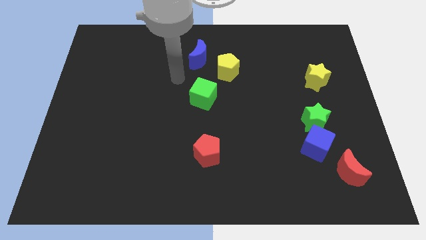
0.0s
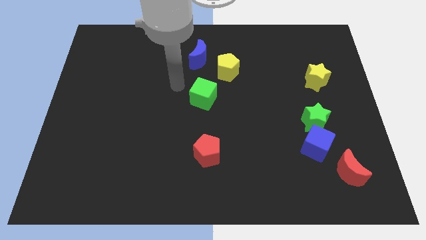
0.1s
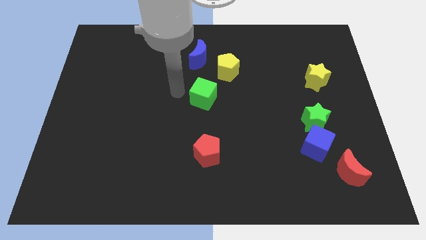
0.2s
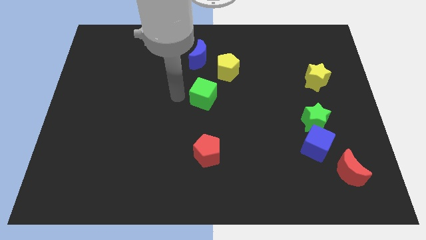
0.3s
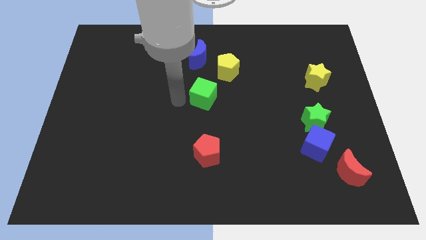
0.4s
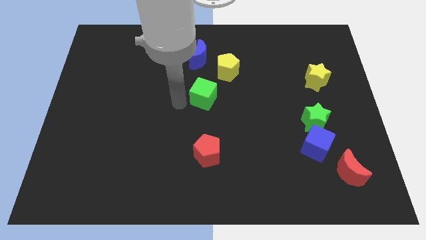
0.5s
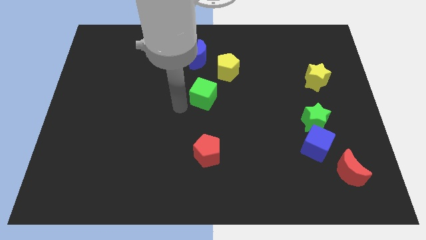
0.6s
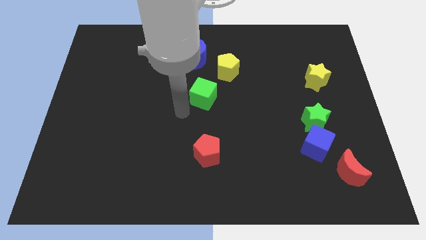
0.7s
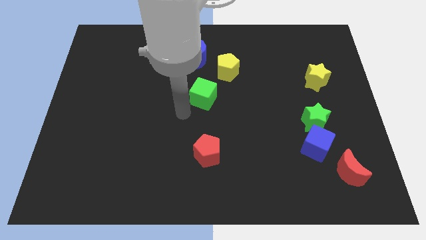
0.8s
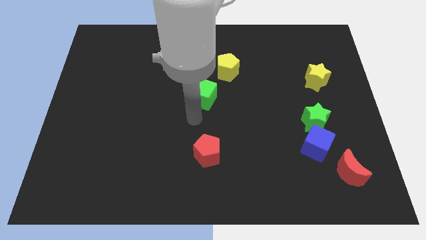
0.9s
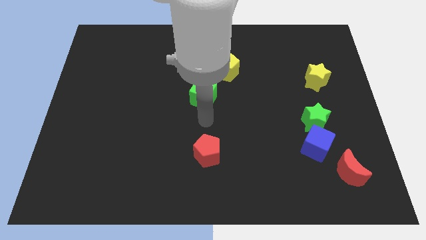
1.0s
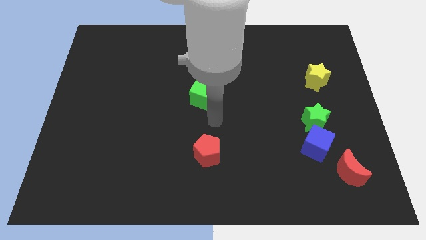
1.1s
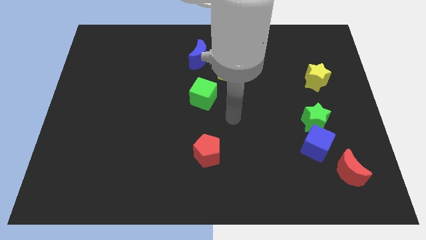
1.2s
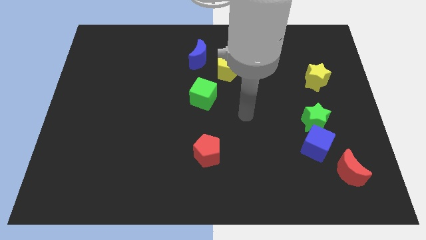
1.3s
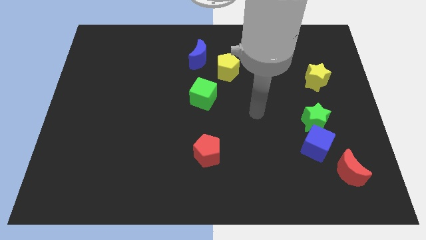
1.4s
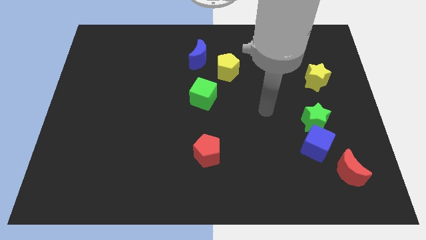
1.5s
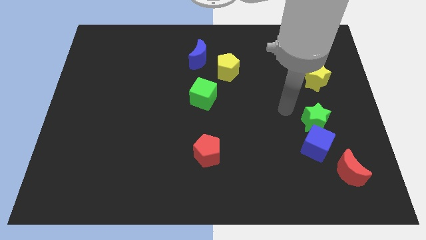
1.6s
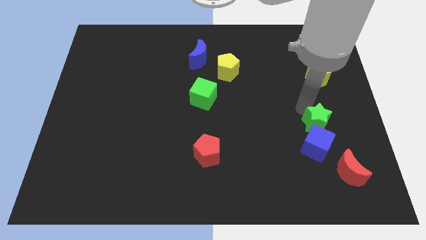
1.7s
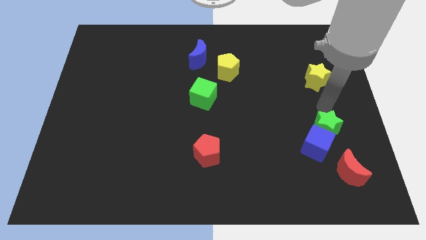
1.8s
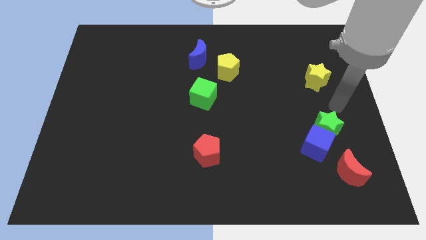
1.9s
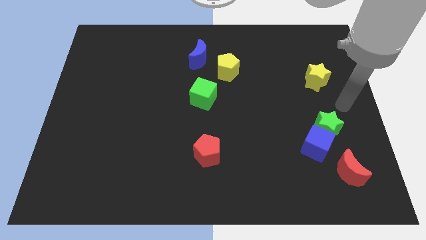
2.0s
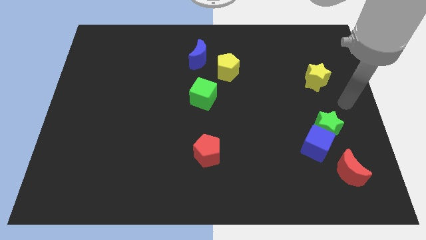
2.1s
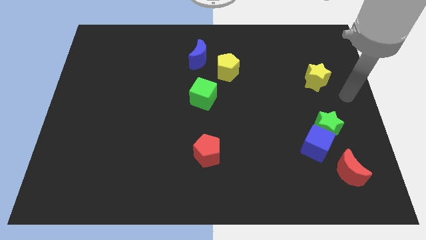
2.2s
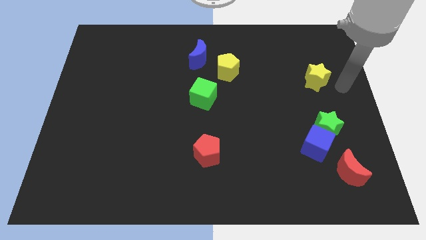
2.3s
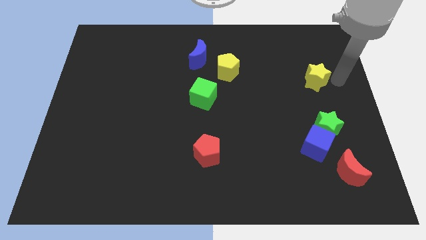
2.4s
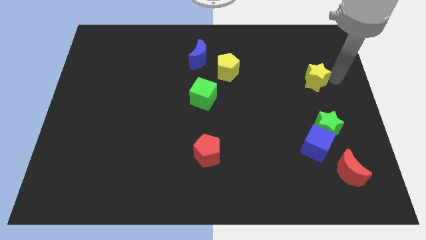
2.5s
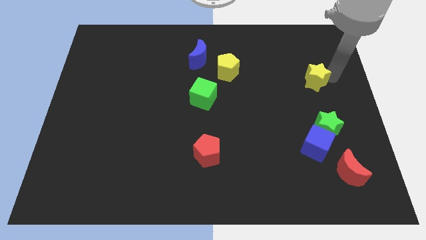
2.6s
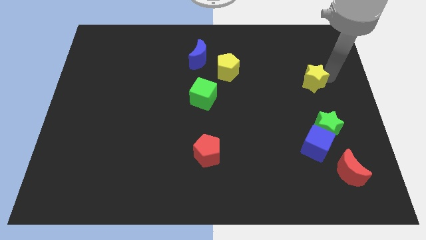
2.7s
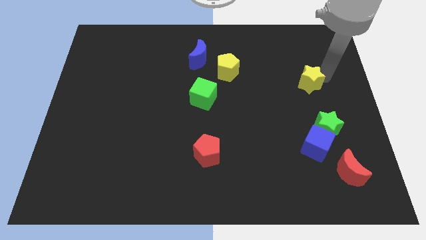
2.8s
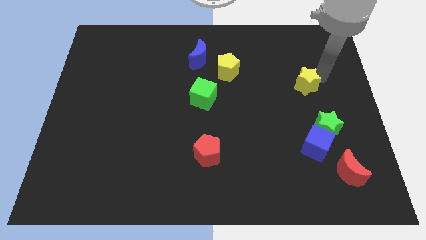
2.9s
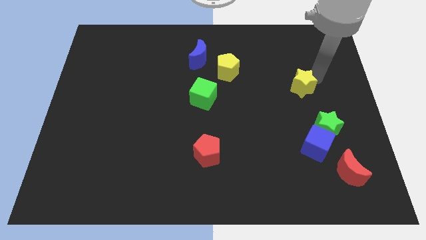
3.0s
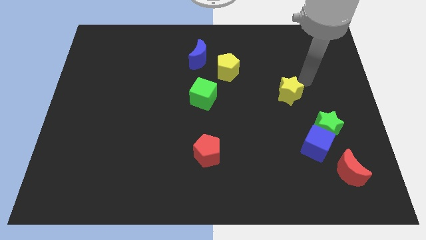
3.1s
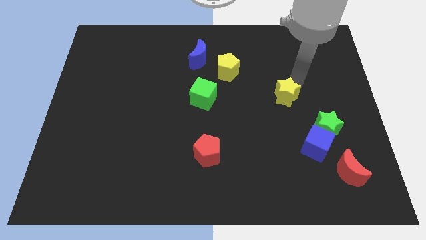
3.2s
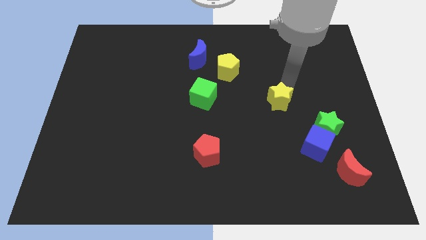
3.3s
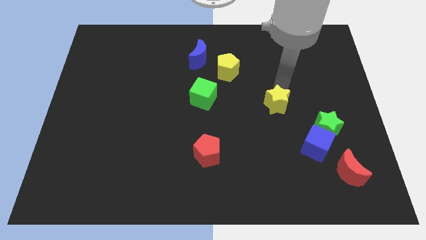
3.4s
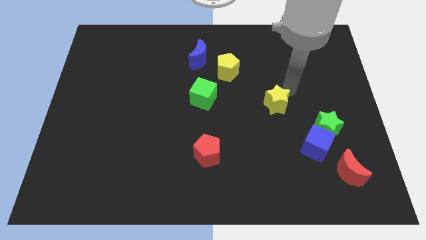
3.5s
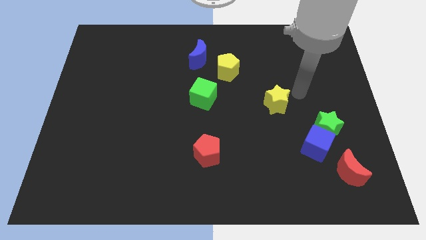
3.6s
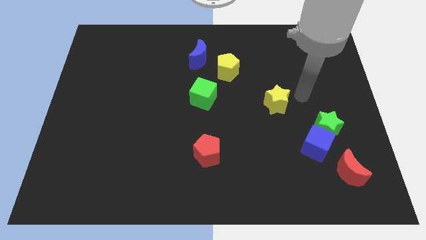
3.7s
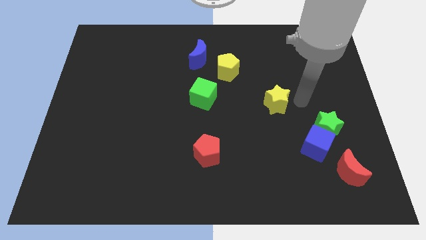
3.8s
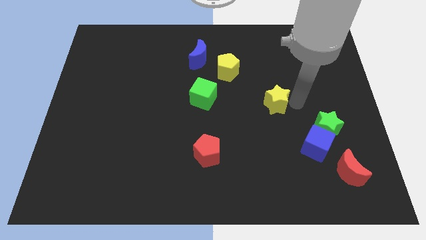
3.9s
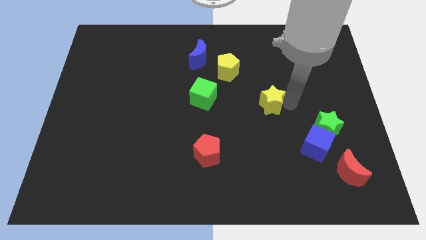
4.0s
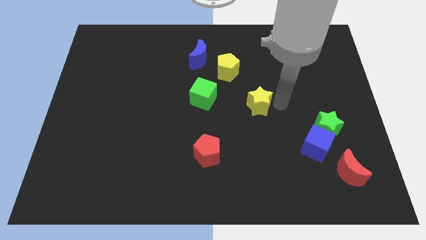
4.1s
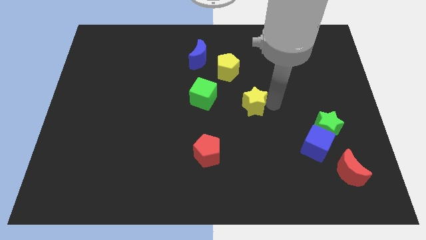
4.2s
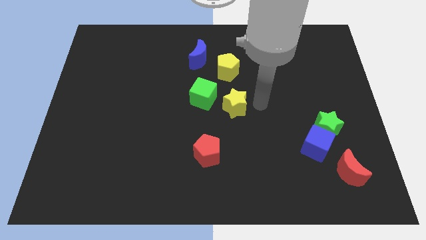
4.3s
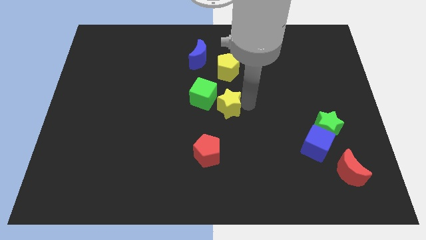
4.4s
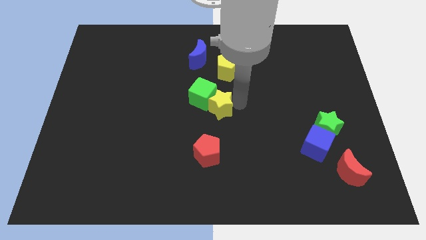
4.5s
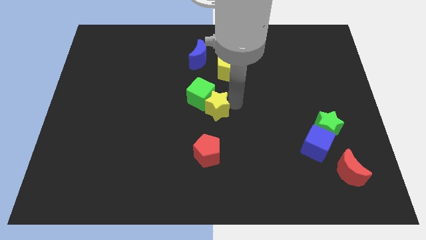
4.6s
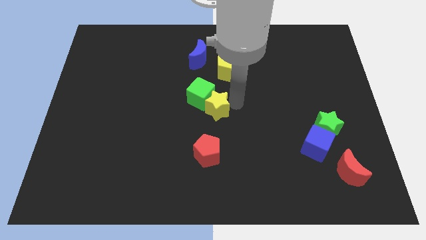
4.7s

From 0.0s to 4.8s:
slide the yellow star next to the green cube

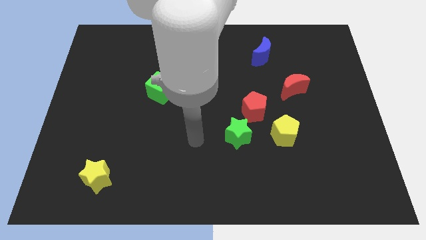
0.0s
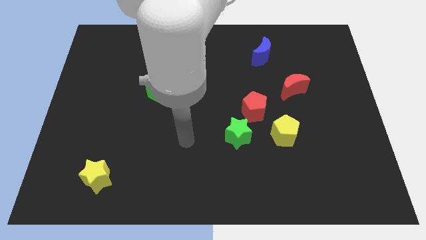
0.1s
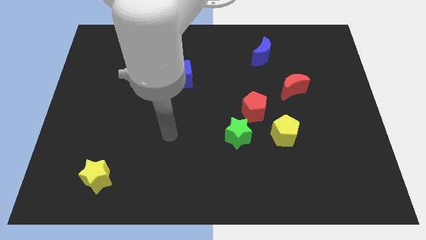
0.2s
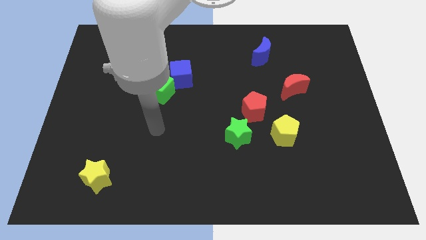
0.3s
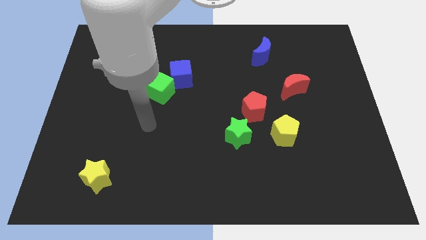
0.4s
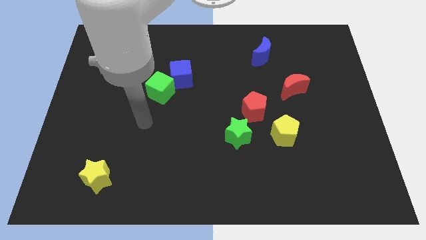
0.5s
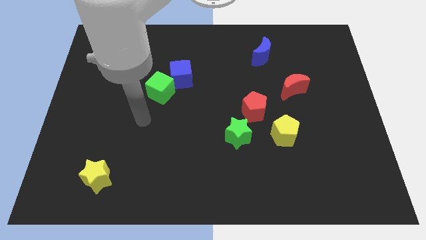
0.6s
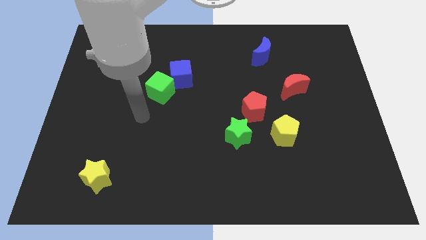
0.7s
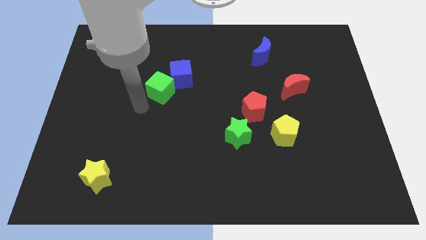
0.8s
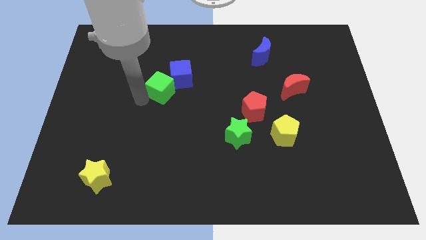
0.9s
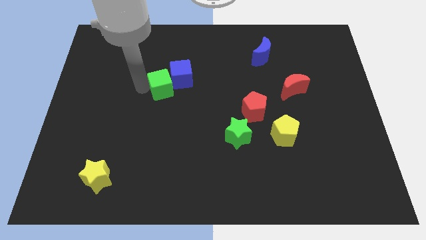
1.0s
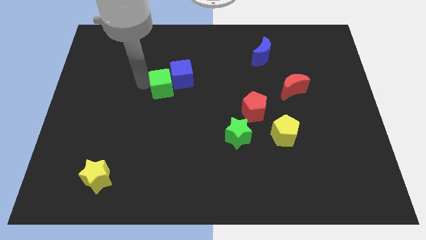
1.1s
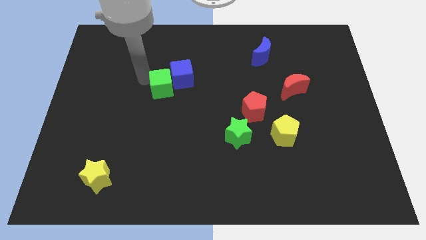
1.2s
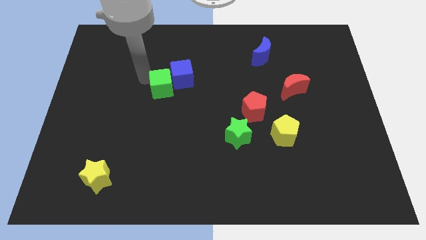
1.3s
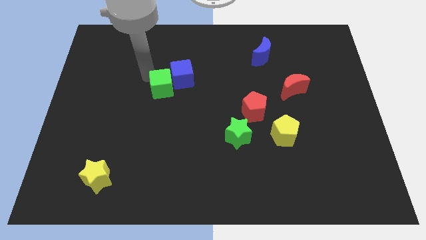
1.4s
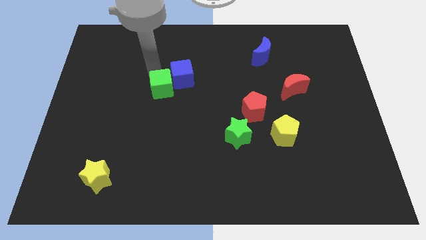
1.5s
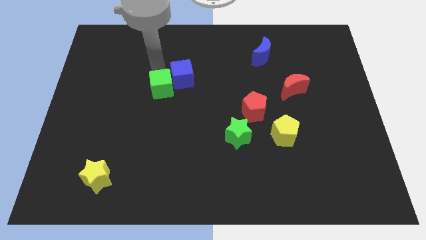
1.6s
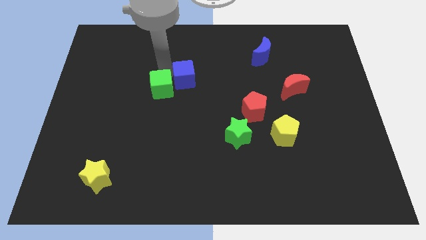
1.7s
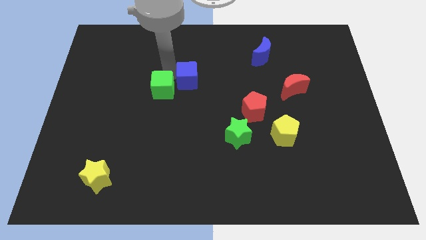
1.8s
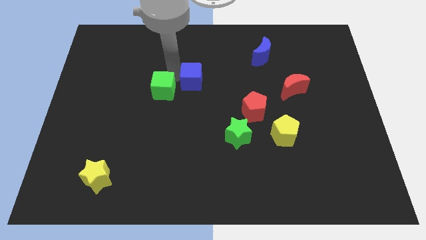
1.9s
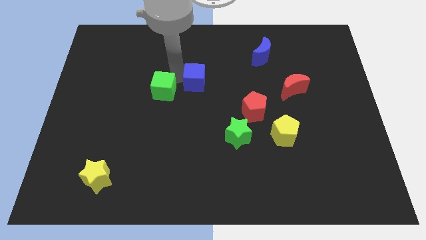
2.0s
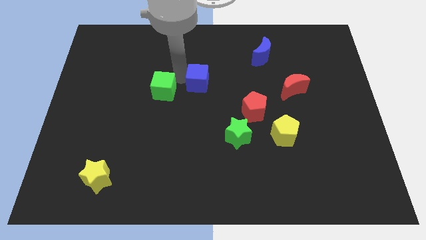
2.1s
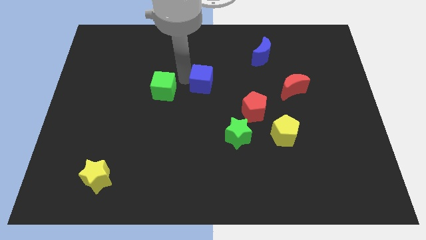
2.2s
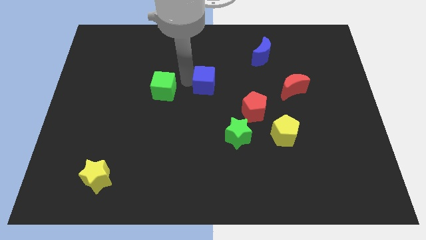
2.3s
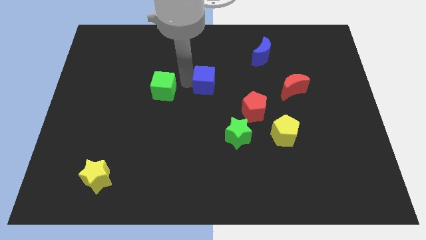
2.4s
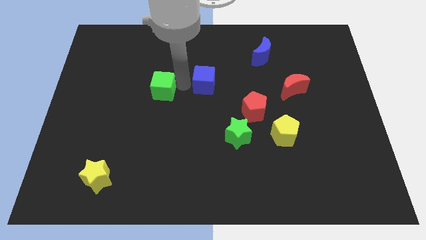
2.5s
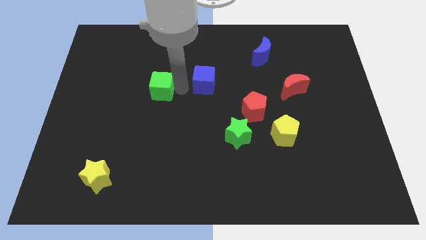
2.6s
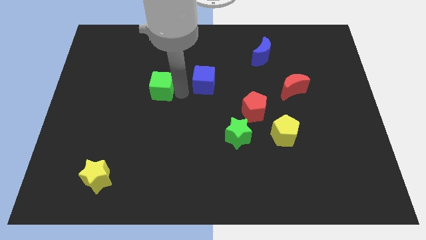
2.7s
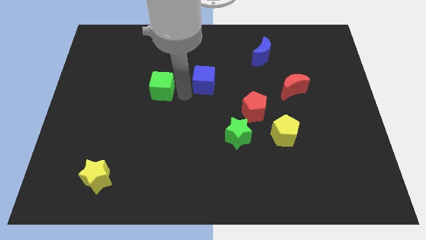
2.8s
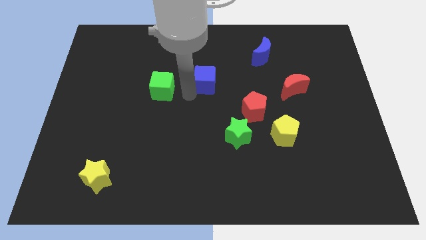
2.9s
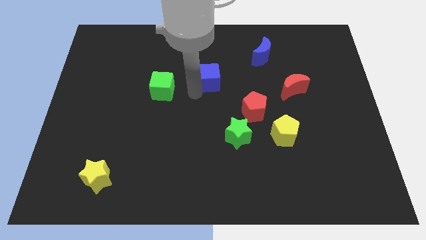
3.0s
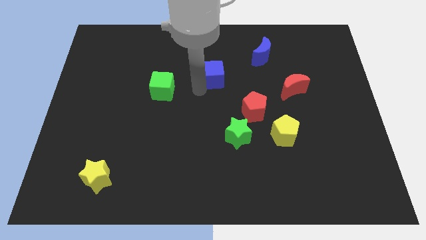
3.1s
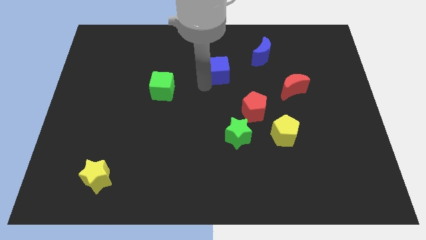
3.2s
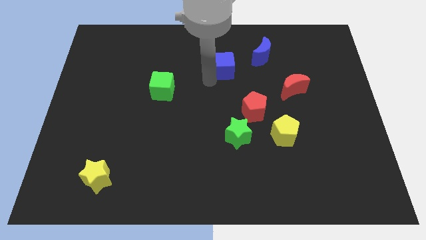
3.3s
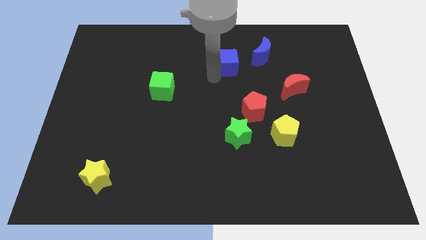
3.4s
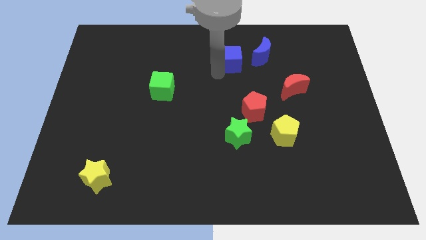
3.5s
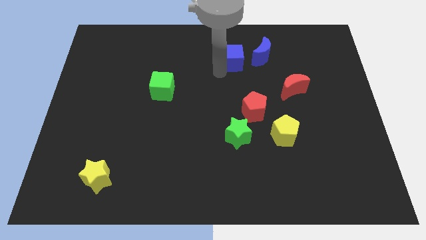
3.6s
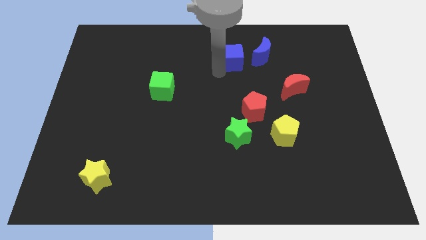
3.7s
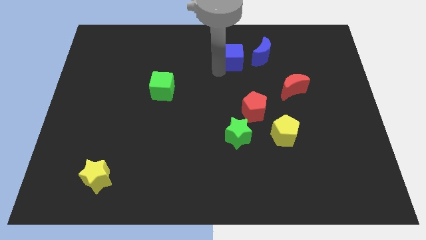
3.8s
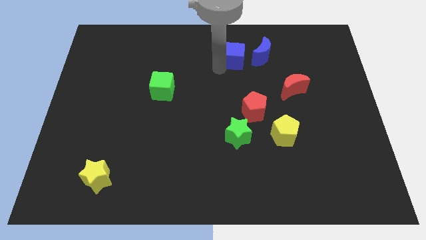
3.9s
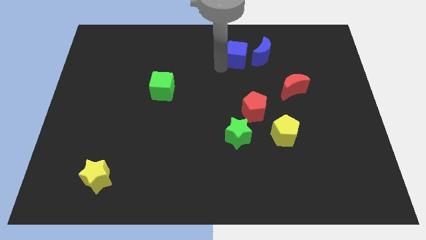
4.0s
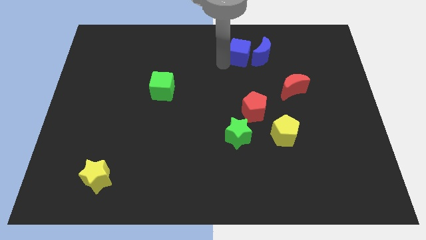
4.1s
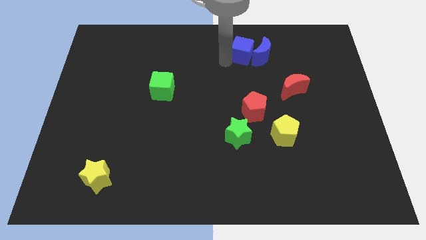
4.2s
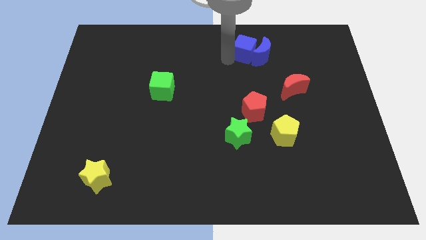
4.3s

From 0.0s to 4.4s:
slide the blue cube close to the blue moon
